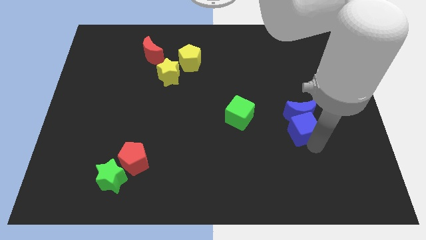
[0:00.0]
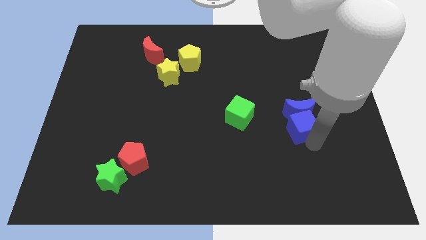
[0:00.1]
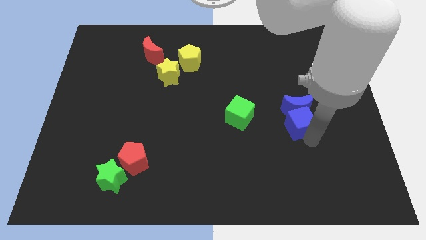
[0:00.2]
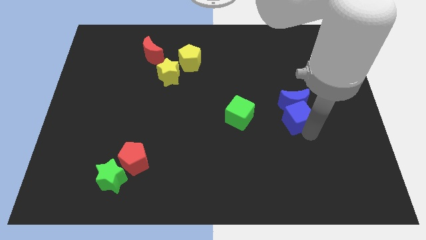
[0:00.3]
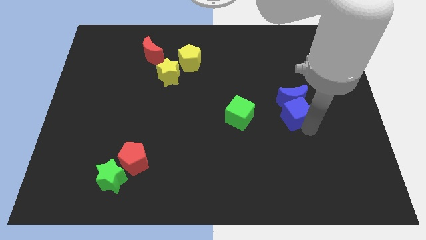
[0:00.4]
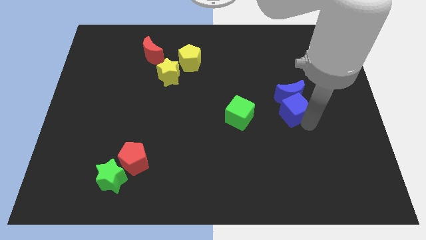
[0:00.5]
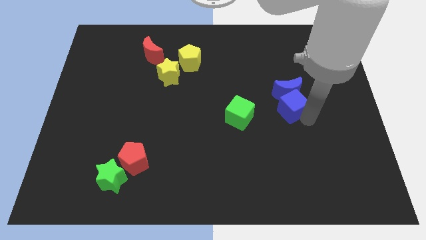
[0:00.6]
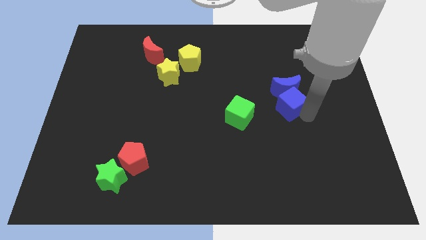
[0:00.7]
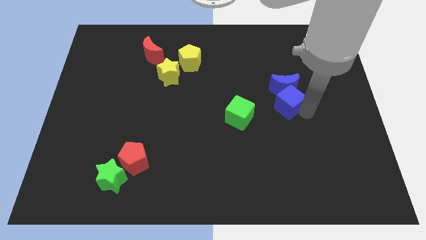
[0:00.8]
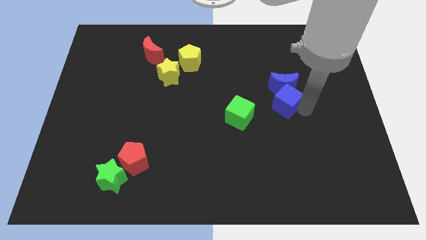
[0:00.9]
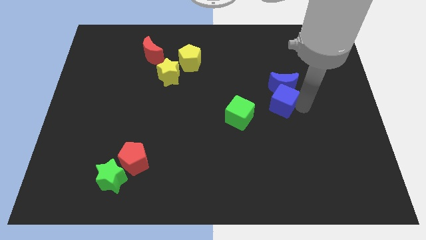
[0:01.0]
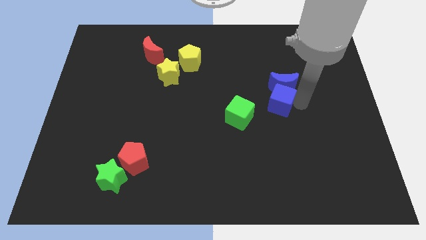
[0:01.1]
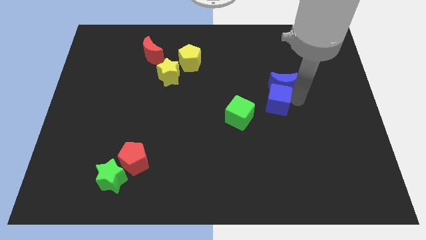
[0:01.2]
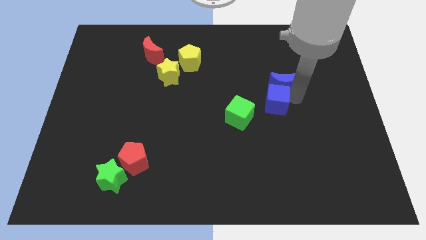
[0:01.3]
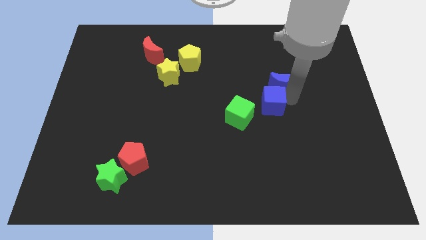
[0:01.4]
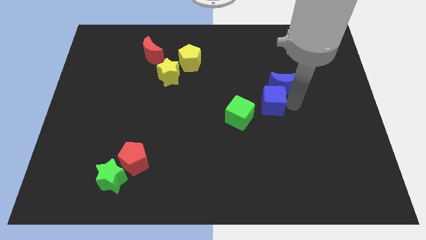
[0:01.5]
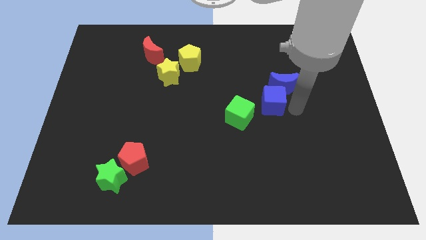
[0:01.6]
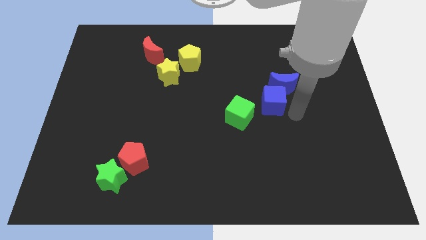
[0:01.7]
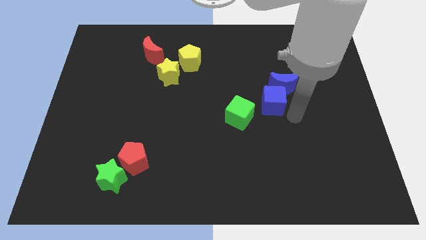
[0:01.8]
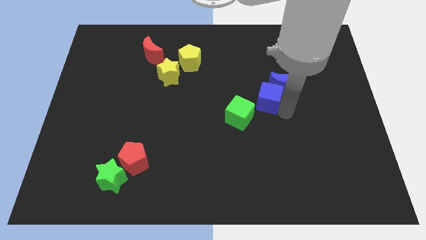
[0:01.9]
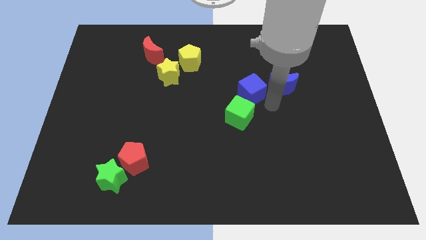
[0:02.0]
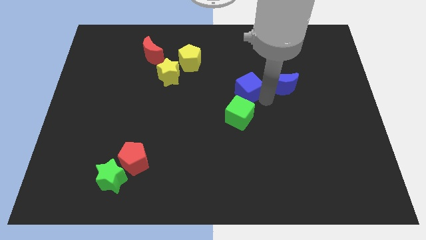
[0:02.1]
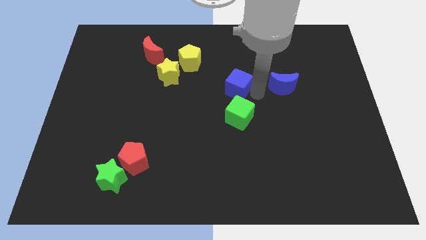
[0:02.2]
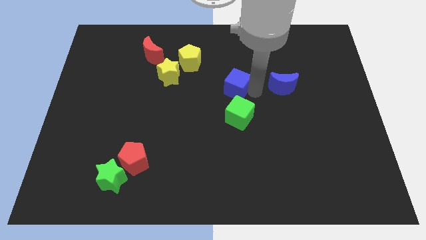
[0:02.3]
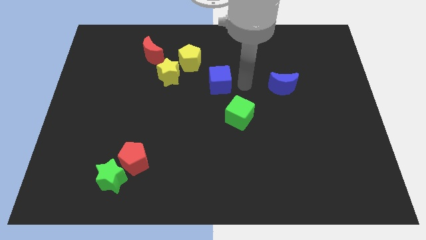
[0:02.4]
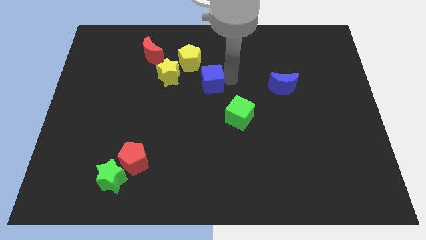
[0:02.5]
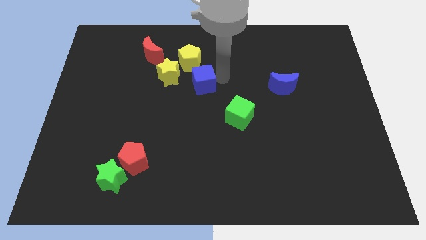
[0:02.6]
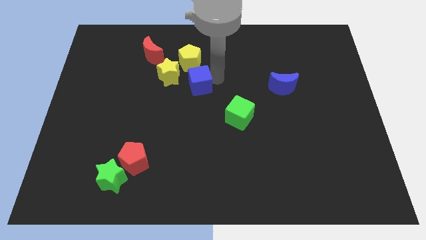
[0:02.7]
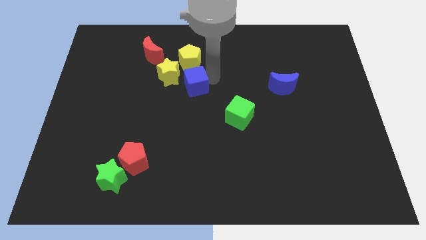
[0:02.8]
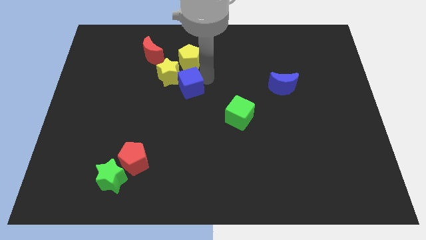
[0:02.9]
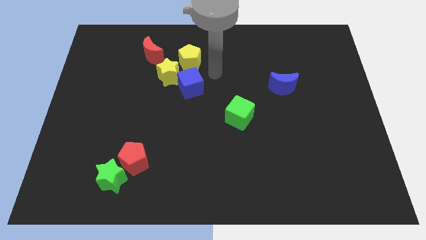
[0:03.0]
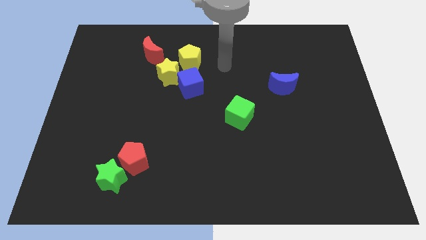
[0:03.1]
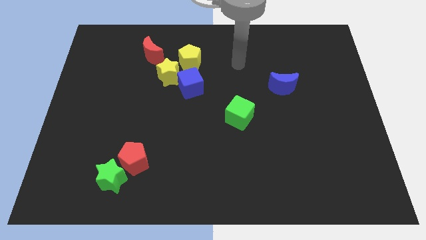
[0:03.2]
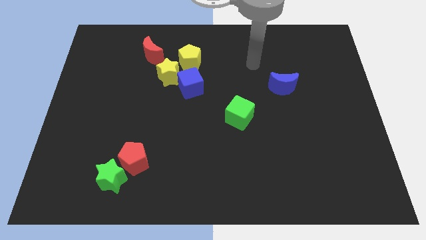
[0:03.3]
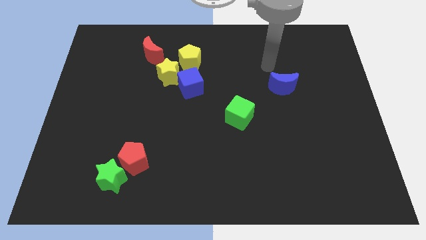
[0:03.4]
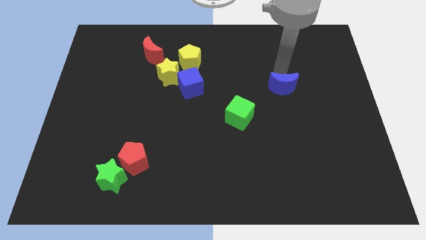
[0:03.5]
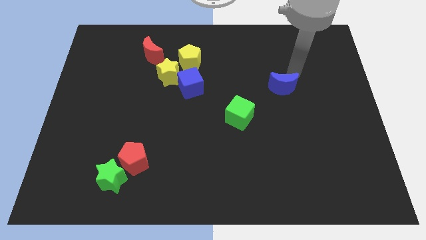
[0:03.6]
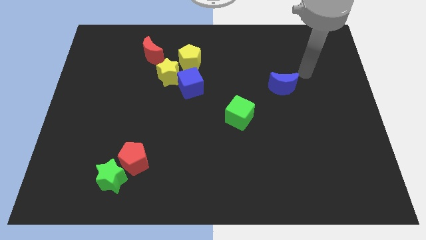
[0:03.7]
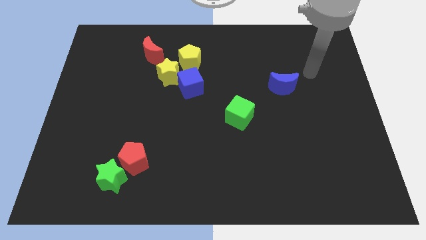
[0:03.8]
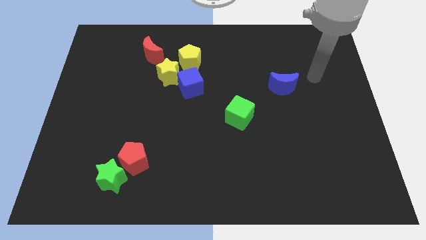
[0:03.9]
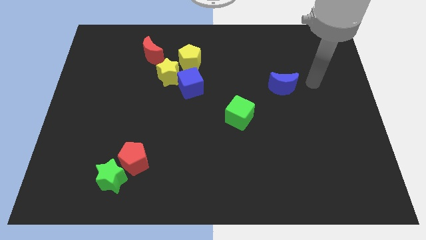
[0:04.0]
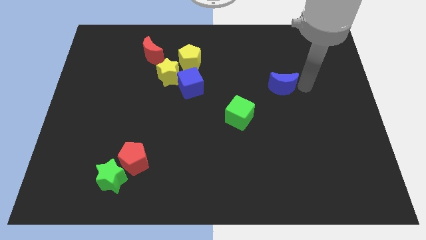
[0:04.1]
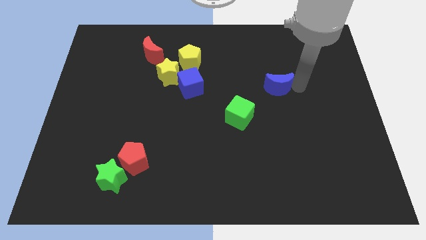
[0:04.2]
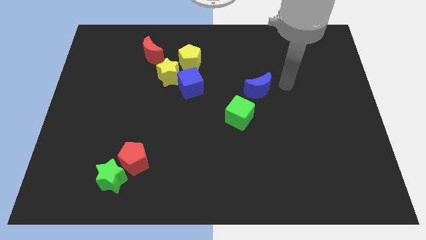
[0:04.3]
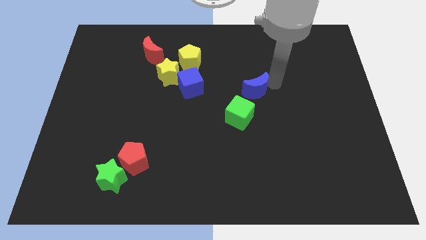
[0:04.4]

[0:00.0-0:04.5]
put the blue moon on the top of the green cube

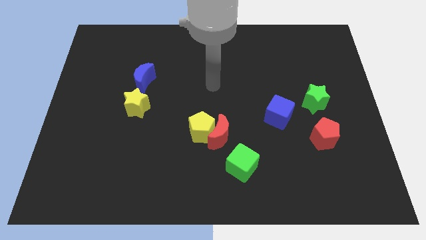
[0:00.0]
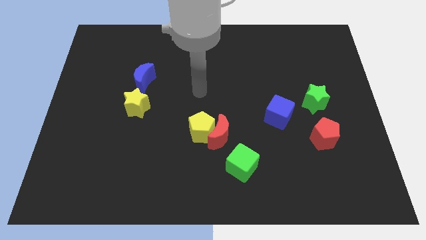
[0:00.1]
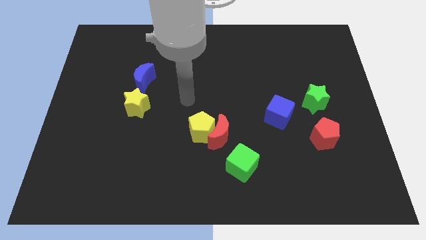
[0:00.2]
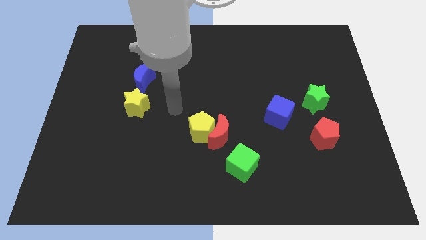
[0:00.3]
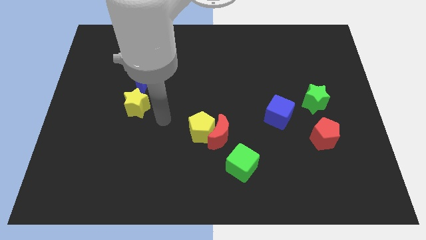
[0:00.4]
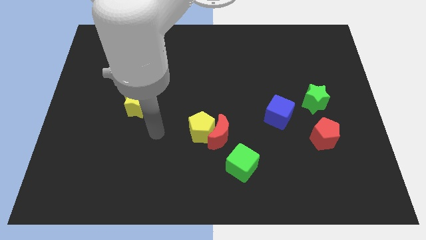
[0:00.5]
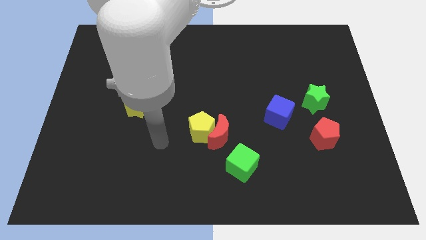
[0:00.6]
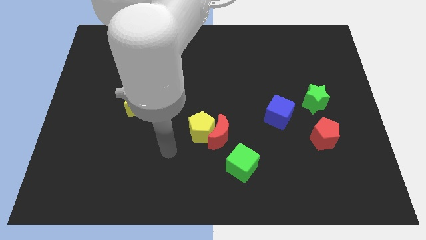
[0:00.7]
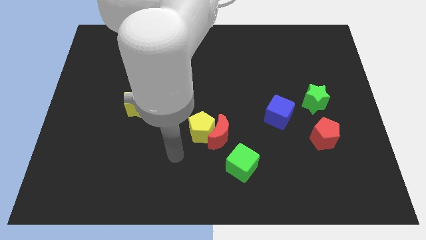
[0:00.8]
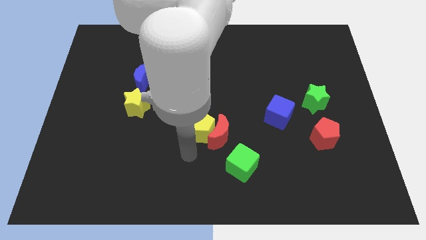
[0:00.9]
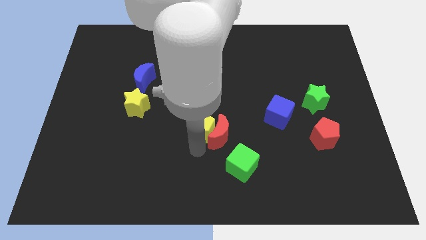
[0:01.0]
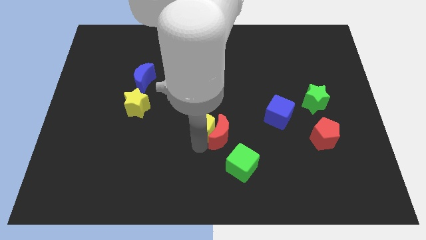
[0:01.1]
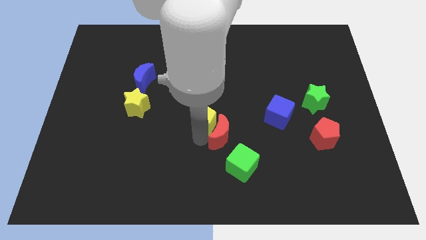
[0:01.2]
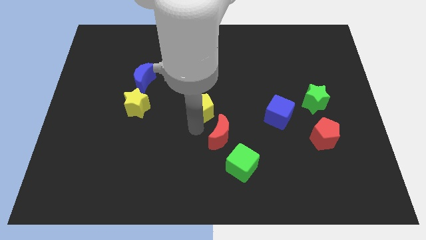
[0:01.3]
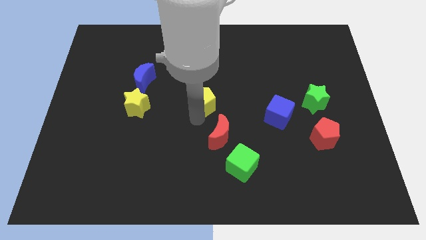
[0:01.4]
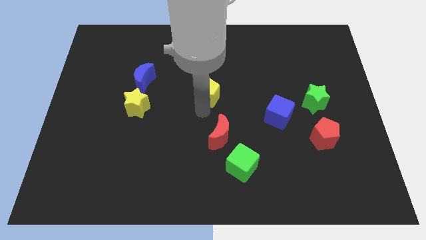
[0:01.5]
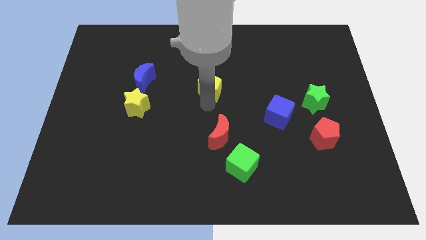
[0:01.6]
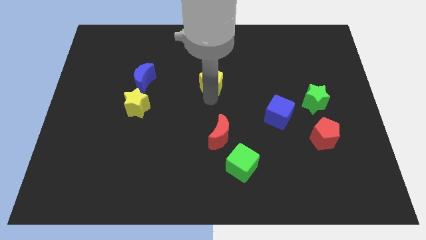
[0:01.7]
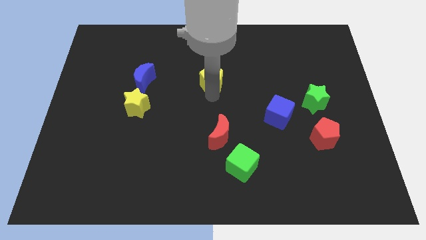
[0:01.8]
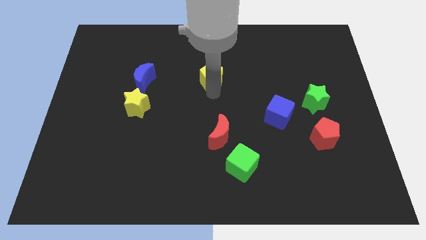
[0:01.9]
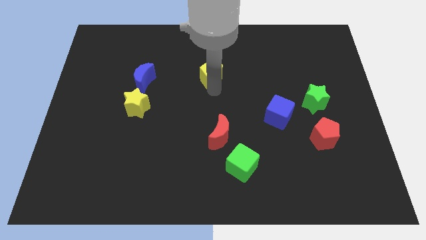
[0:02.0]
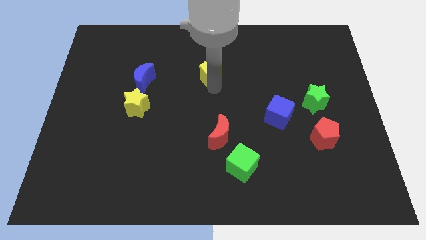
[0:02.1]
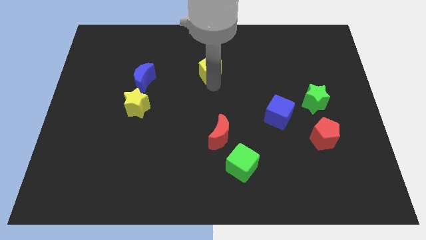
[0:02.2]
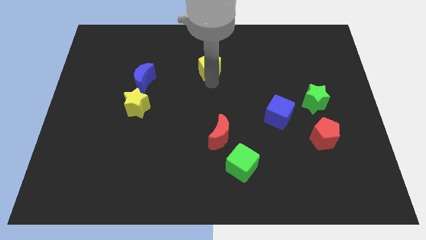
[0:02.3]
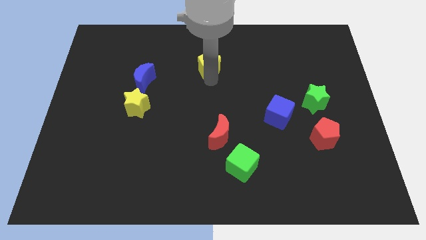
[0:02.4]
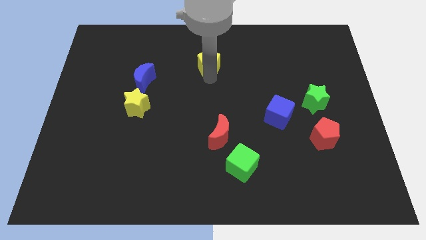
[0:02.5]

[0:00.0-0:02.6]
separate the yellow pentagon from the red moon

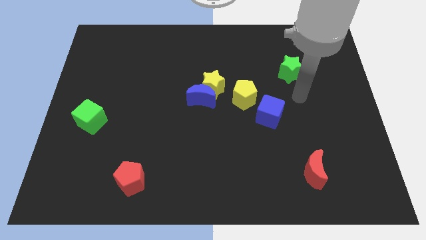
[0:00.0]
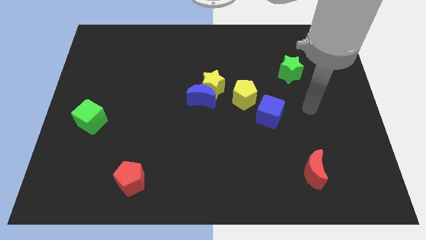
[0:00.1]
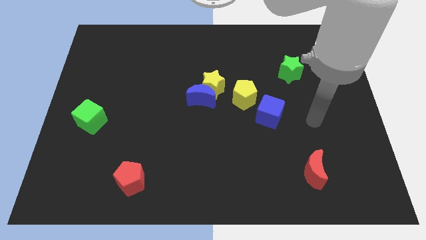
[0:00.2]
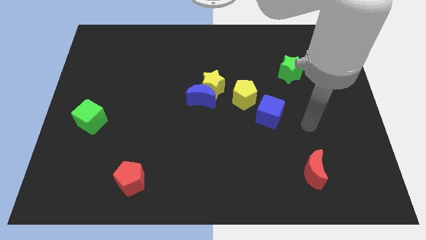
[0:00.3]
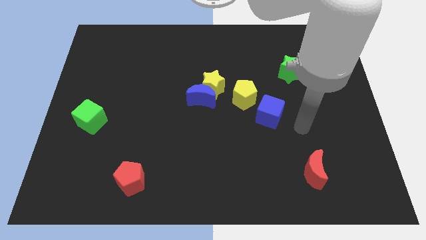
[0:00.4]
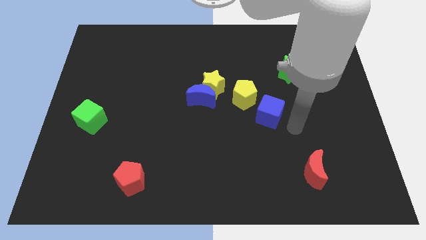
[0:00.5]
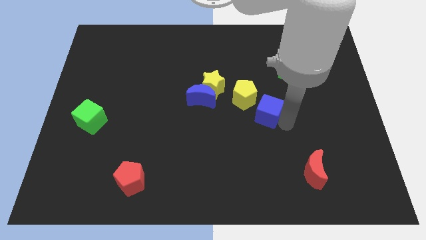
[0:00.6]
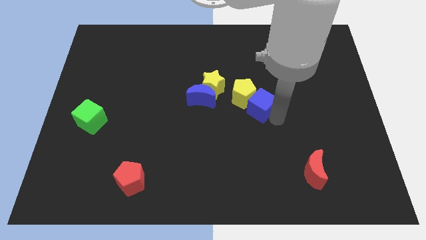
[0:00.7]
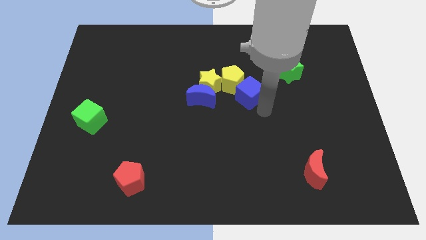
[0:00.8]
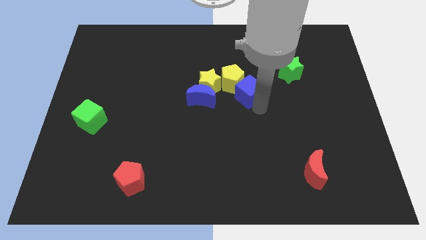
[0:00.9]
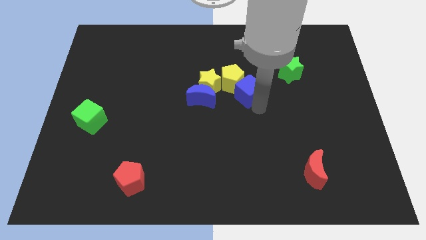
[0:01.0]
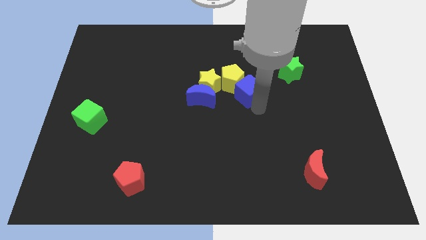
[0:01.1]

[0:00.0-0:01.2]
push the blue cube into the yellow pentagon

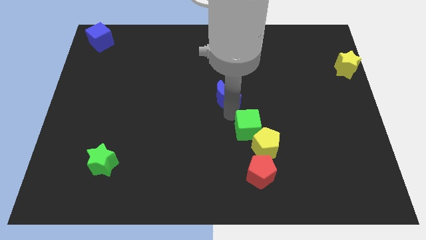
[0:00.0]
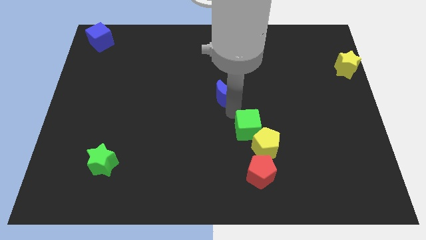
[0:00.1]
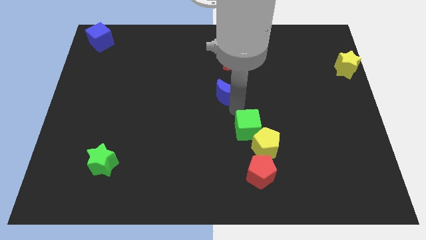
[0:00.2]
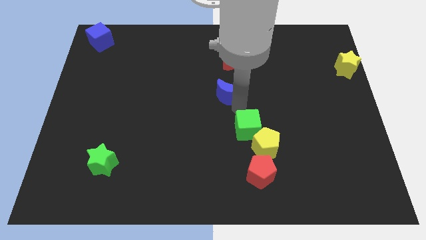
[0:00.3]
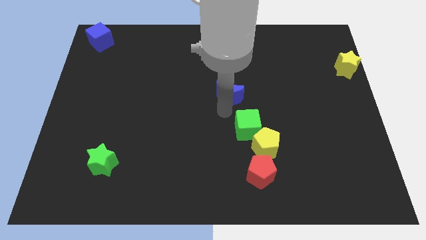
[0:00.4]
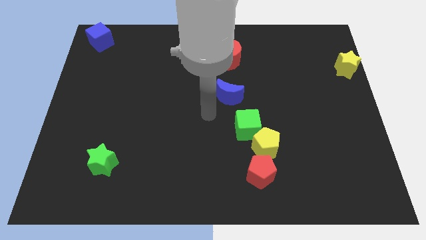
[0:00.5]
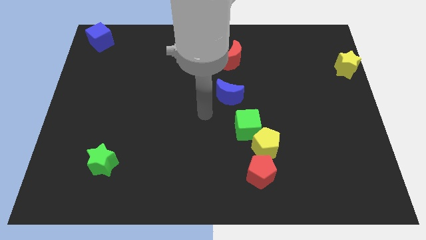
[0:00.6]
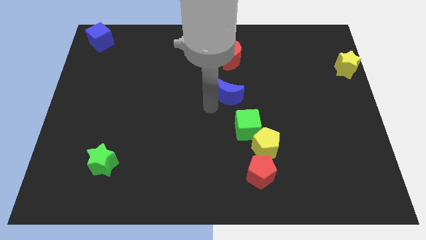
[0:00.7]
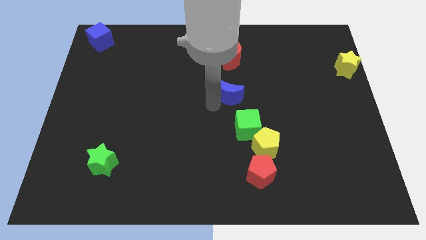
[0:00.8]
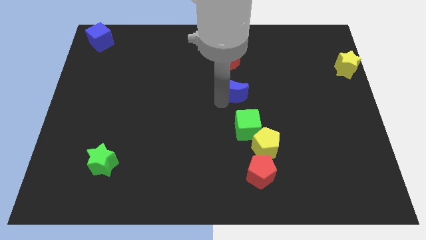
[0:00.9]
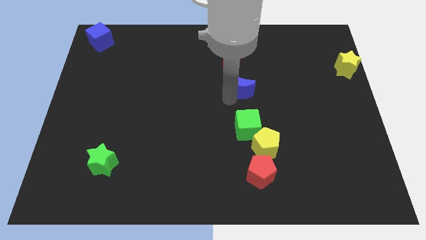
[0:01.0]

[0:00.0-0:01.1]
slide blue moon on top of green cube
